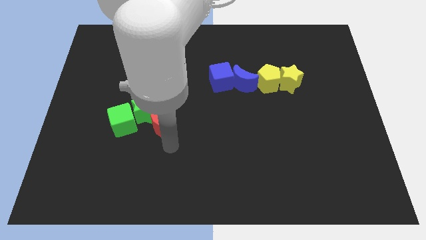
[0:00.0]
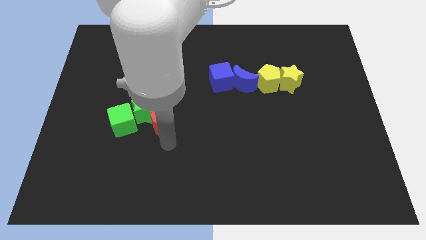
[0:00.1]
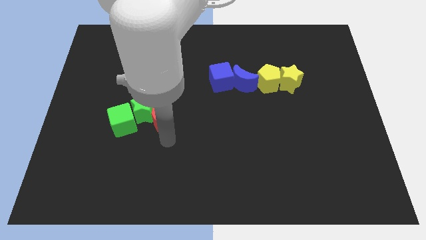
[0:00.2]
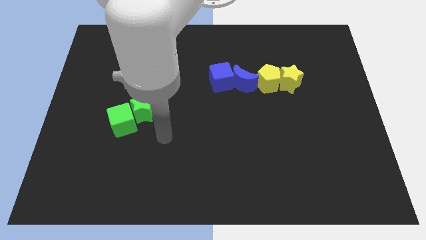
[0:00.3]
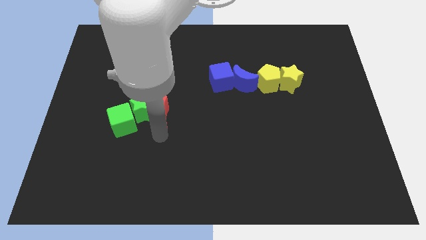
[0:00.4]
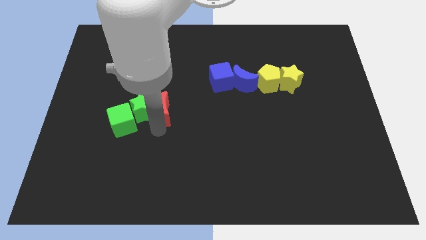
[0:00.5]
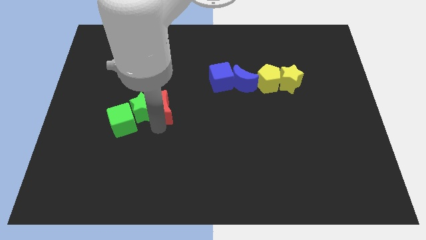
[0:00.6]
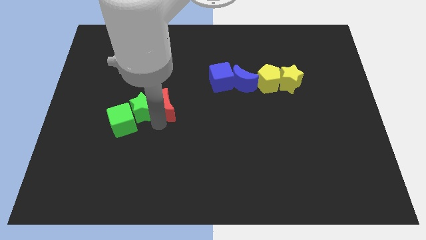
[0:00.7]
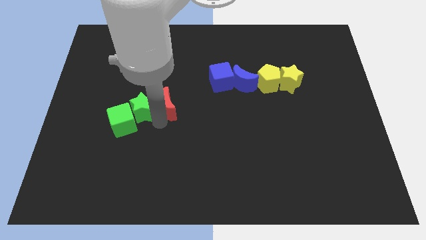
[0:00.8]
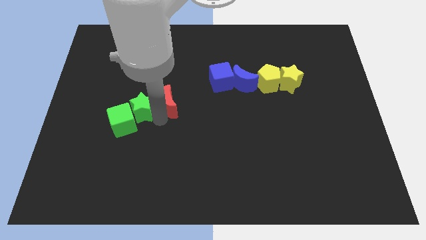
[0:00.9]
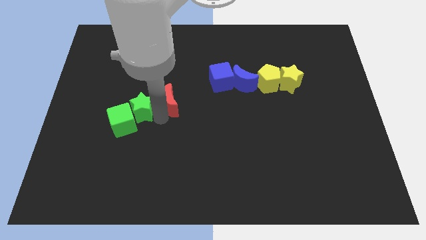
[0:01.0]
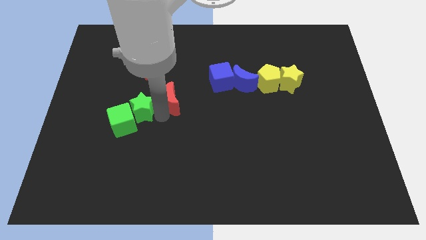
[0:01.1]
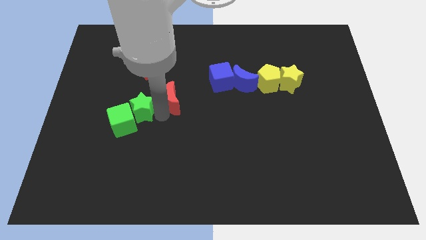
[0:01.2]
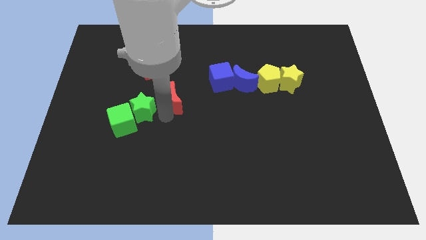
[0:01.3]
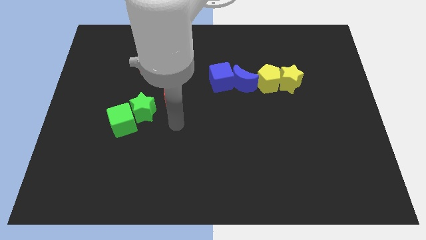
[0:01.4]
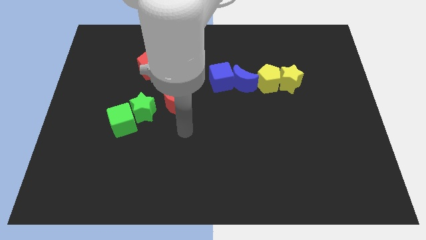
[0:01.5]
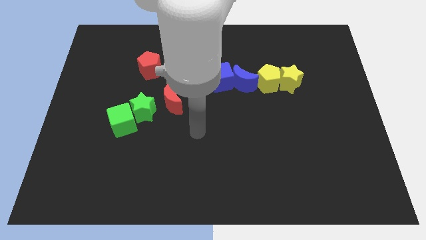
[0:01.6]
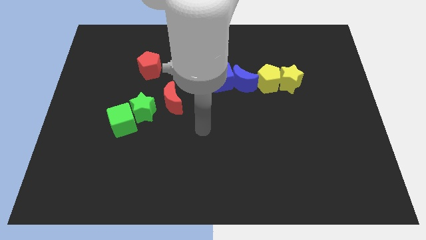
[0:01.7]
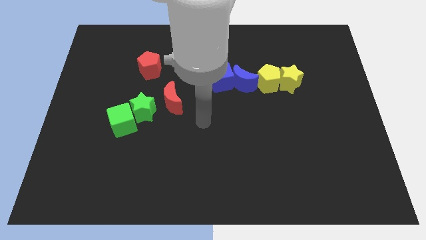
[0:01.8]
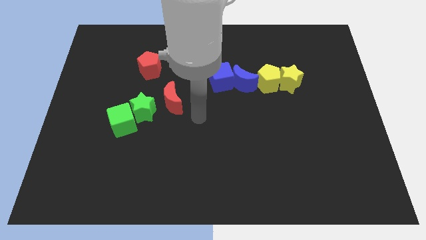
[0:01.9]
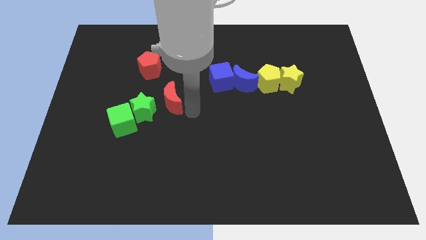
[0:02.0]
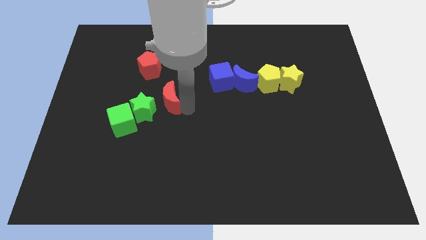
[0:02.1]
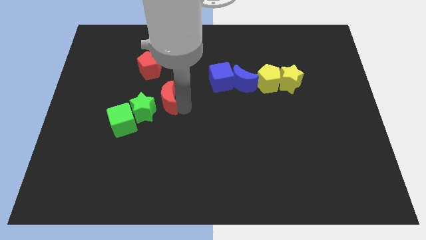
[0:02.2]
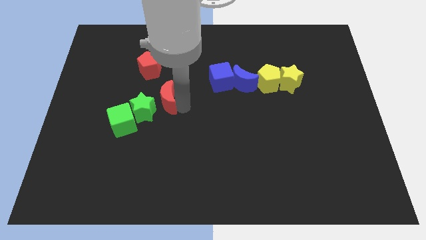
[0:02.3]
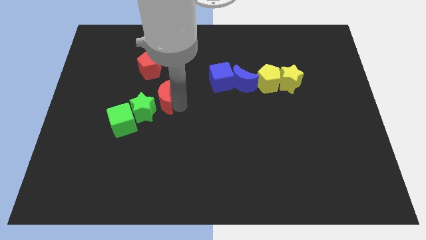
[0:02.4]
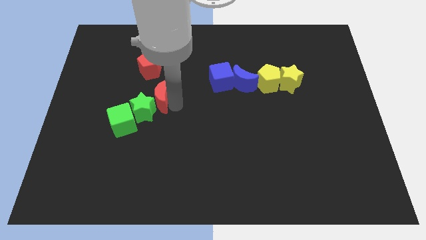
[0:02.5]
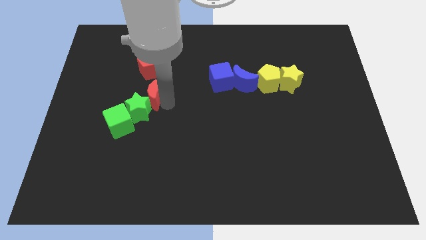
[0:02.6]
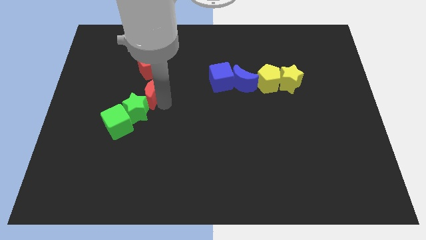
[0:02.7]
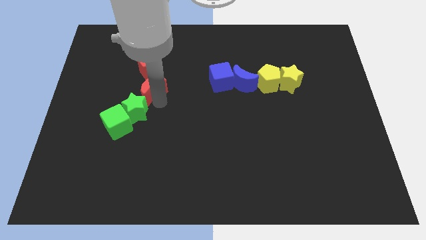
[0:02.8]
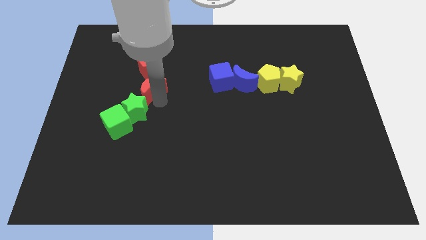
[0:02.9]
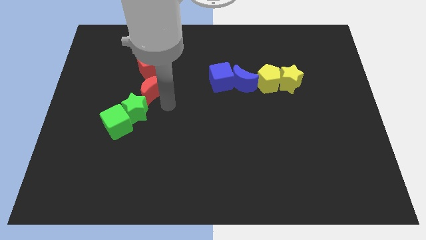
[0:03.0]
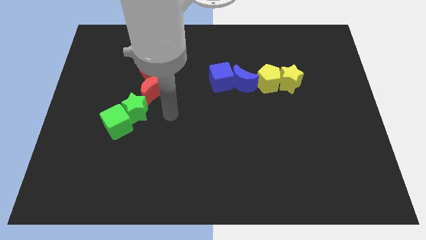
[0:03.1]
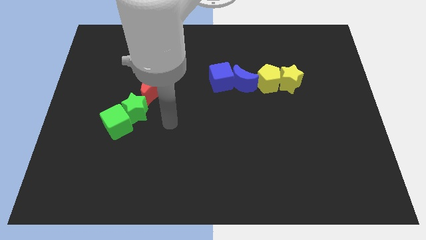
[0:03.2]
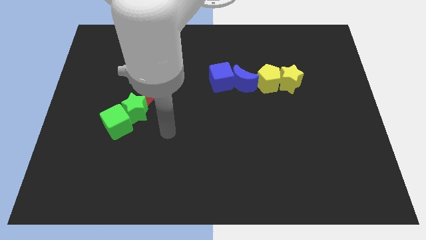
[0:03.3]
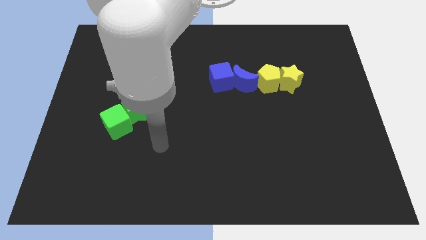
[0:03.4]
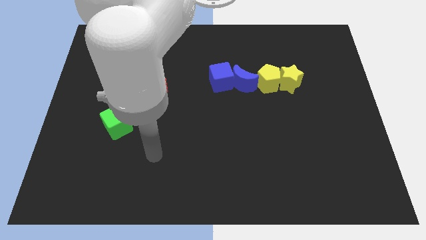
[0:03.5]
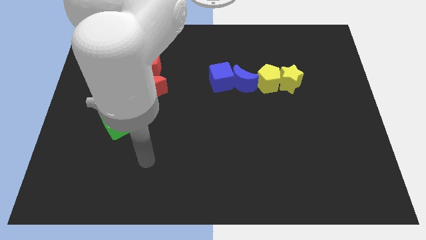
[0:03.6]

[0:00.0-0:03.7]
place red moon to the bottom of red pentagon

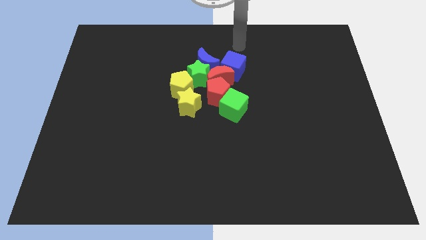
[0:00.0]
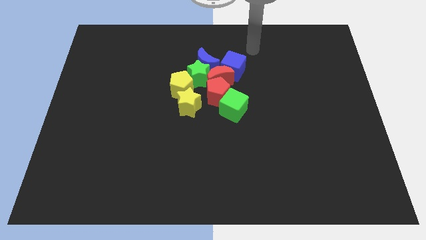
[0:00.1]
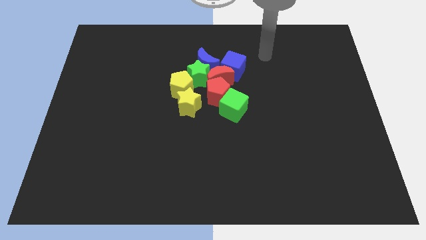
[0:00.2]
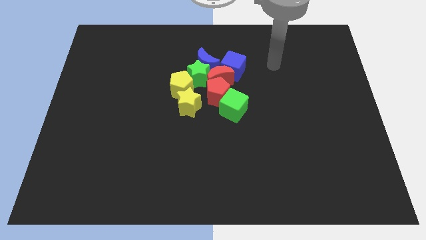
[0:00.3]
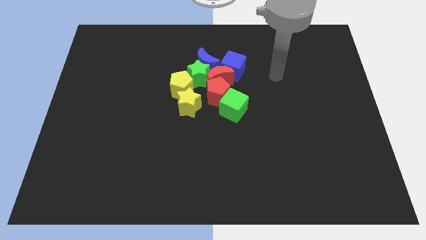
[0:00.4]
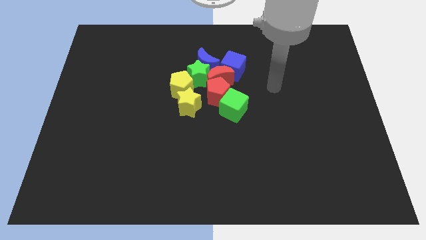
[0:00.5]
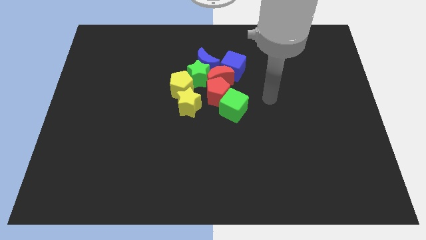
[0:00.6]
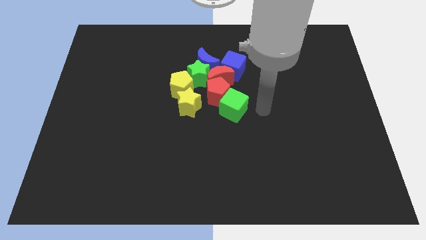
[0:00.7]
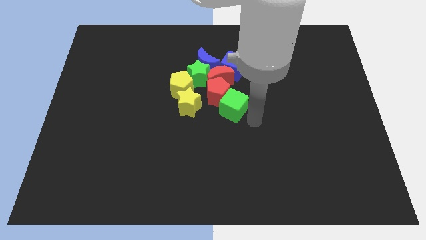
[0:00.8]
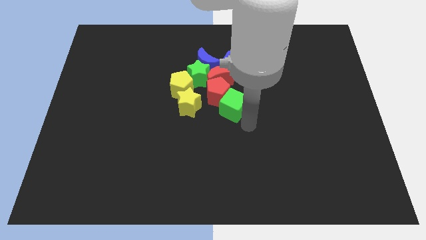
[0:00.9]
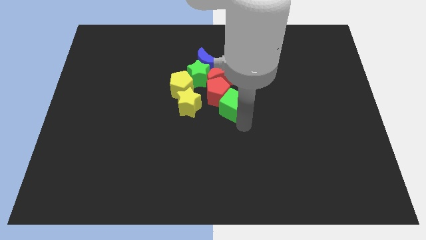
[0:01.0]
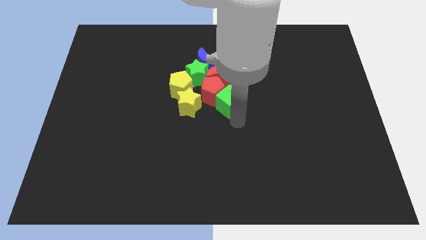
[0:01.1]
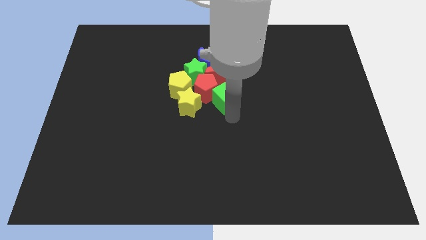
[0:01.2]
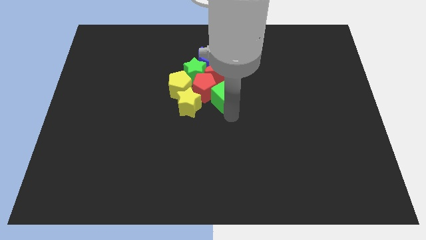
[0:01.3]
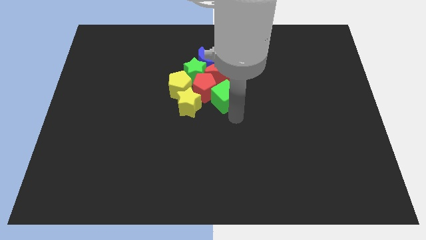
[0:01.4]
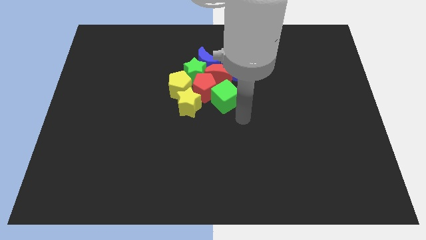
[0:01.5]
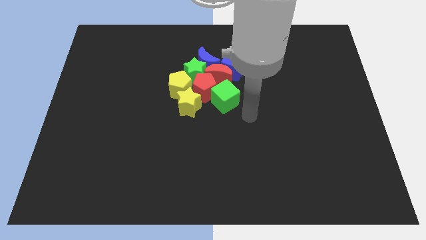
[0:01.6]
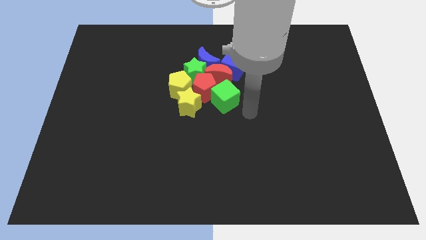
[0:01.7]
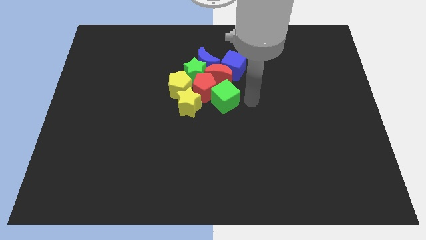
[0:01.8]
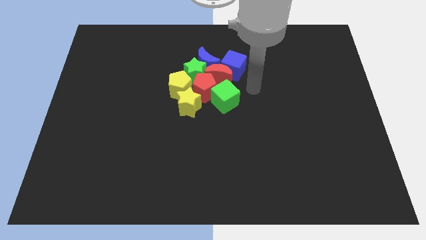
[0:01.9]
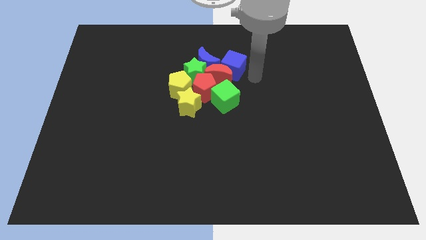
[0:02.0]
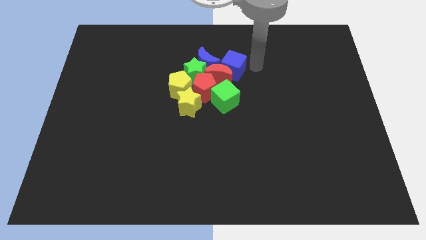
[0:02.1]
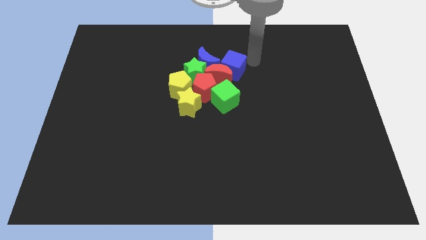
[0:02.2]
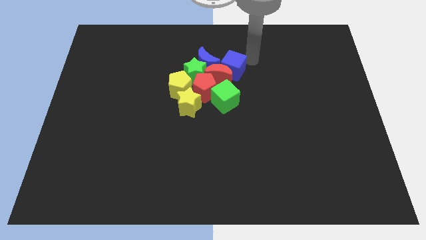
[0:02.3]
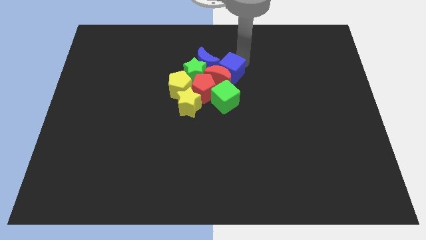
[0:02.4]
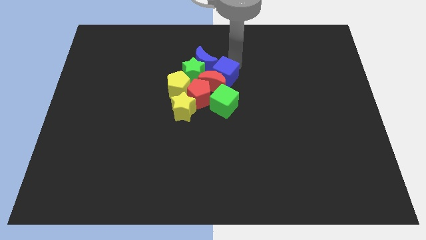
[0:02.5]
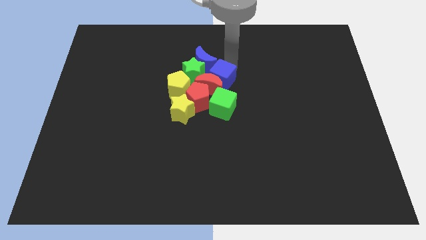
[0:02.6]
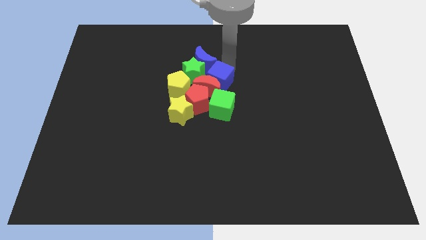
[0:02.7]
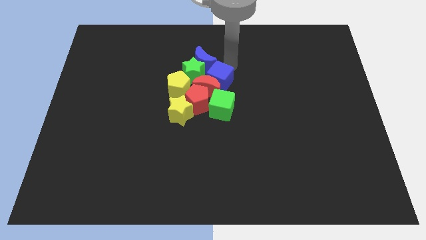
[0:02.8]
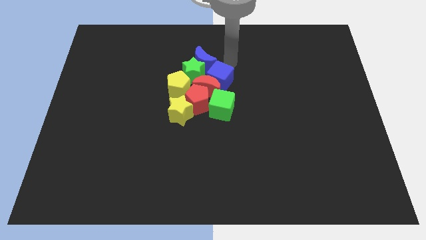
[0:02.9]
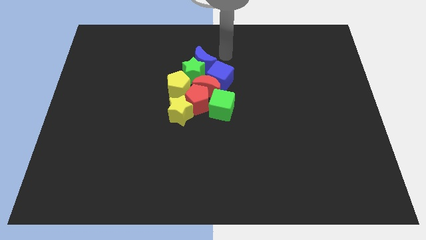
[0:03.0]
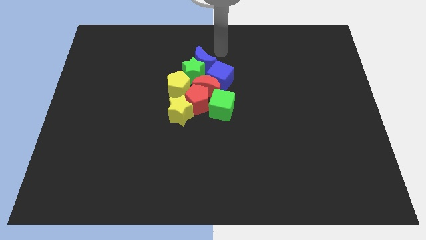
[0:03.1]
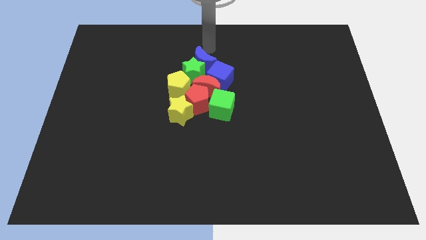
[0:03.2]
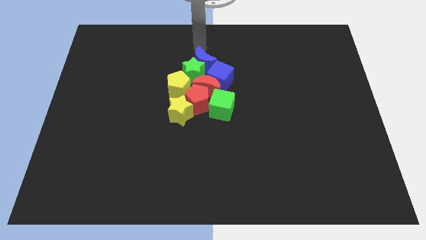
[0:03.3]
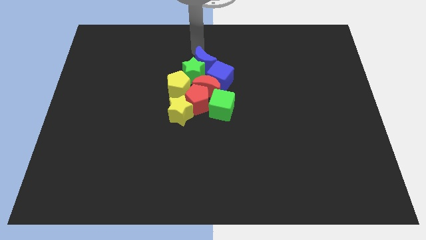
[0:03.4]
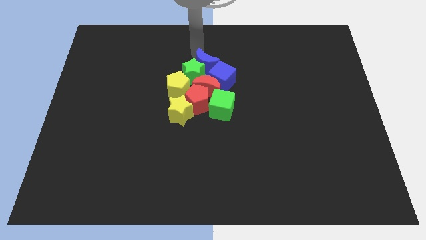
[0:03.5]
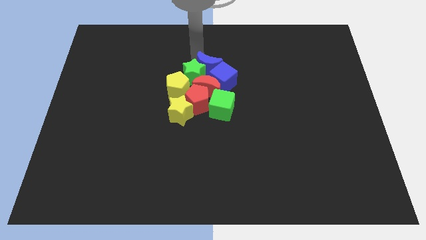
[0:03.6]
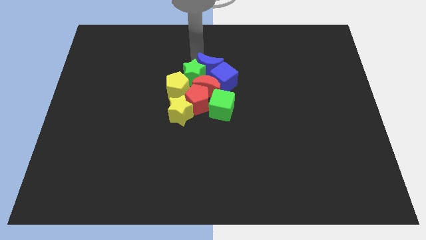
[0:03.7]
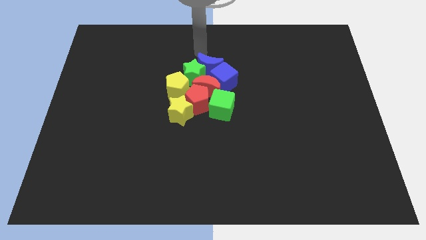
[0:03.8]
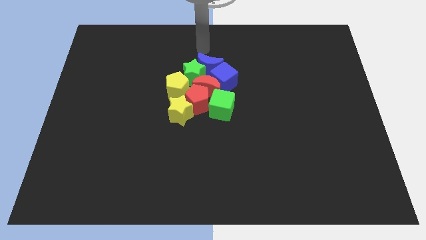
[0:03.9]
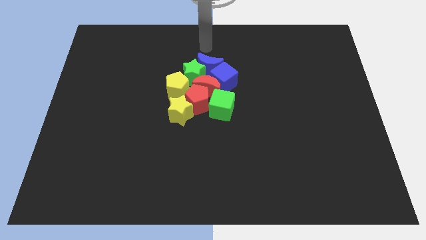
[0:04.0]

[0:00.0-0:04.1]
push the blue cube into the red crescent

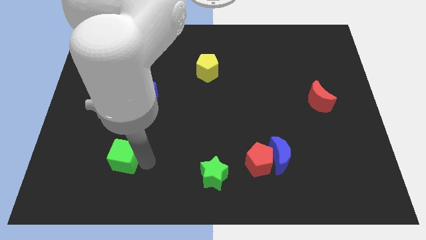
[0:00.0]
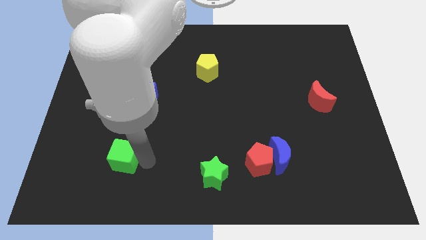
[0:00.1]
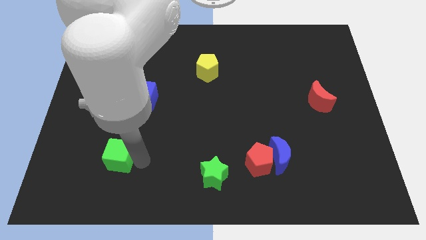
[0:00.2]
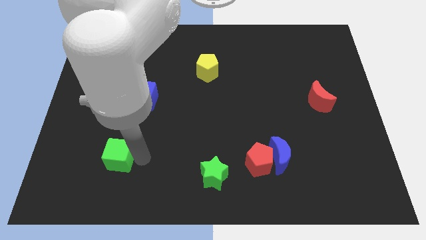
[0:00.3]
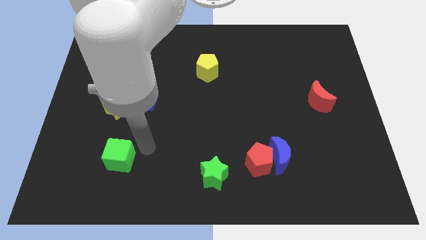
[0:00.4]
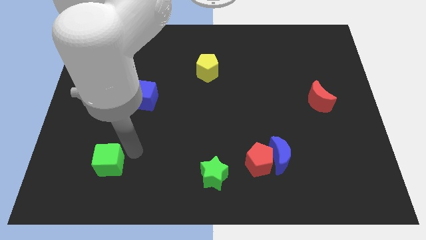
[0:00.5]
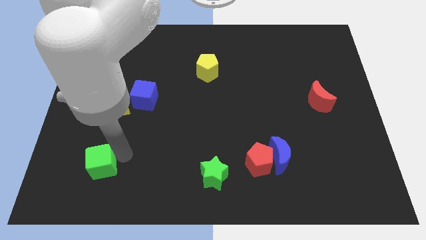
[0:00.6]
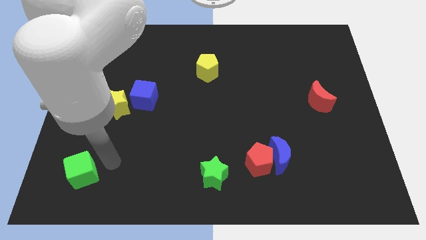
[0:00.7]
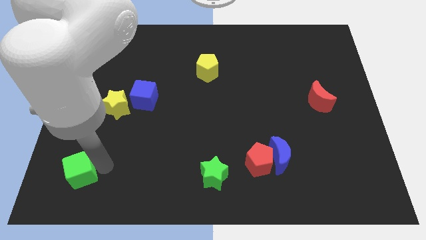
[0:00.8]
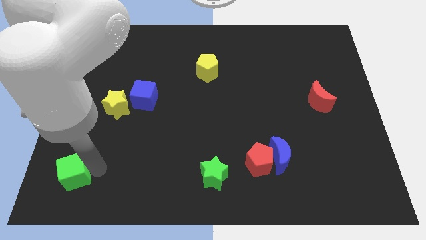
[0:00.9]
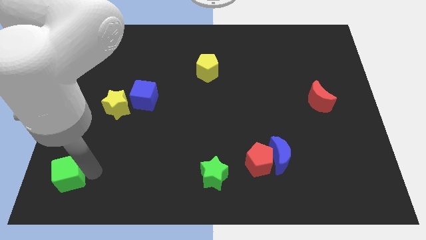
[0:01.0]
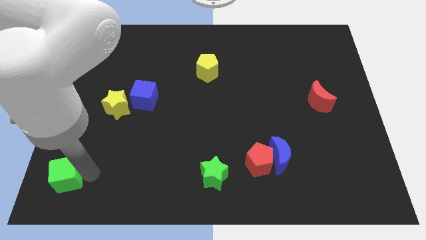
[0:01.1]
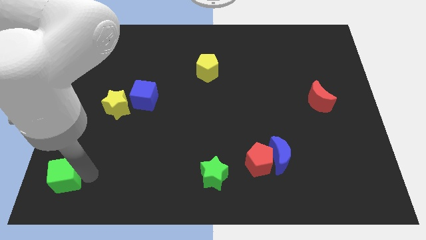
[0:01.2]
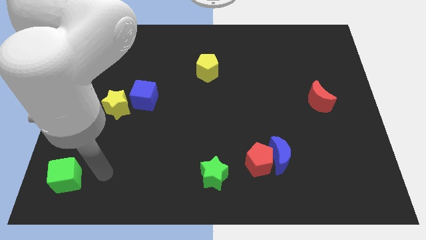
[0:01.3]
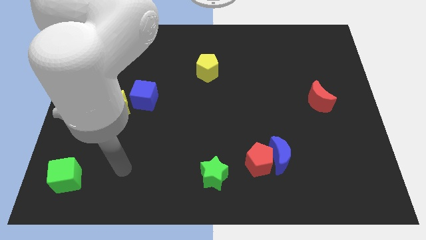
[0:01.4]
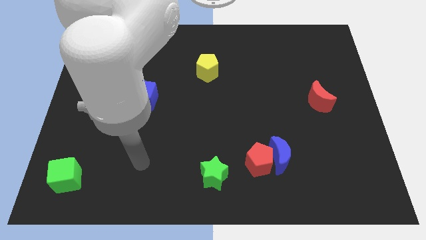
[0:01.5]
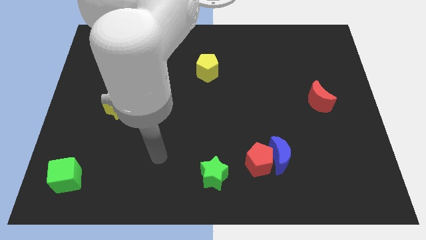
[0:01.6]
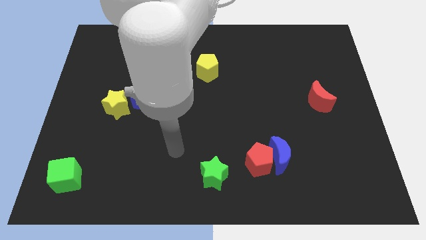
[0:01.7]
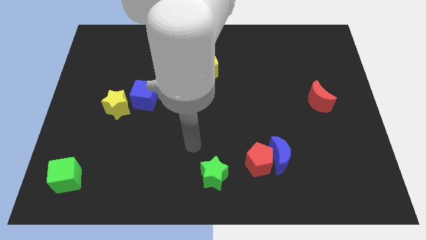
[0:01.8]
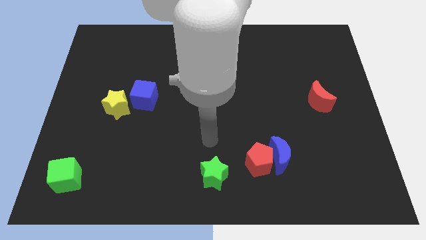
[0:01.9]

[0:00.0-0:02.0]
push green cube to the bottom left corner of the board
